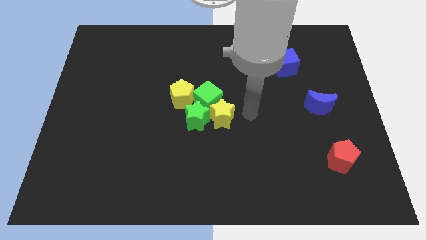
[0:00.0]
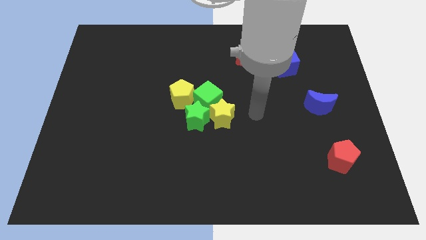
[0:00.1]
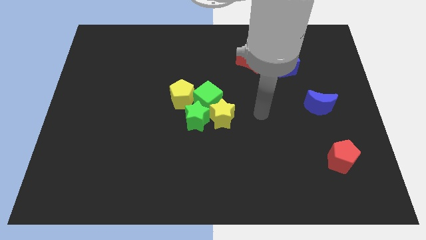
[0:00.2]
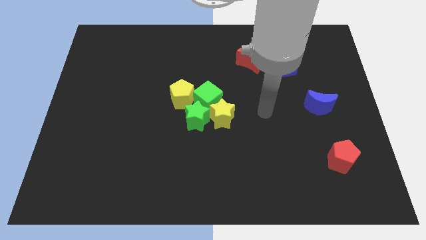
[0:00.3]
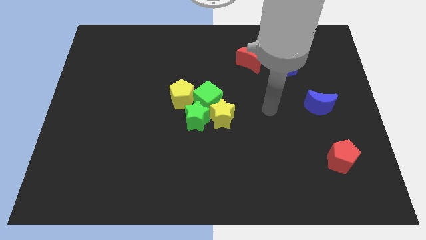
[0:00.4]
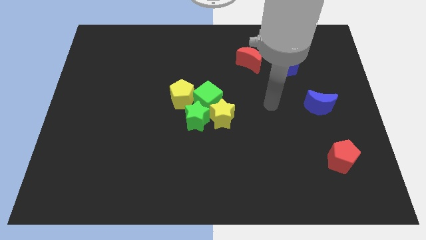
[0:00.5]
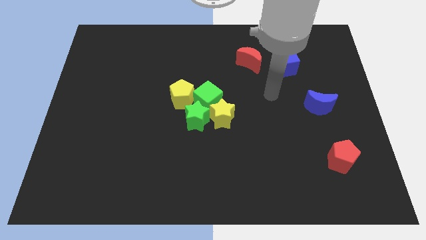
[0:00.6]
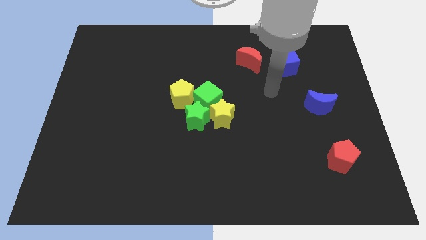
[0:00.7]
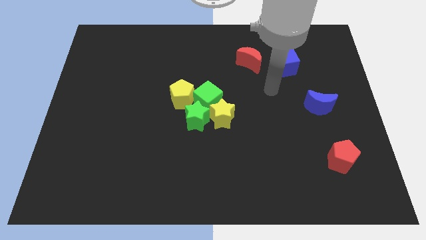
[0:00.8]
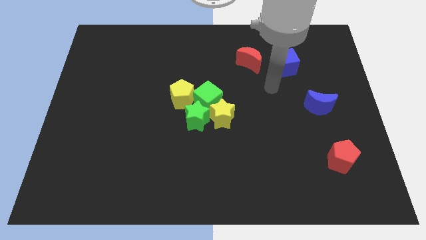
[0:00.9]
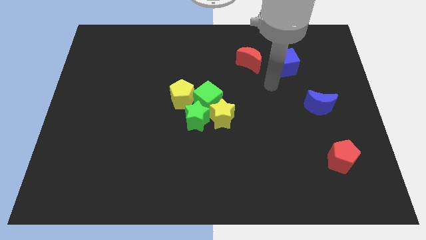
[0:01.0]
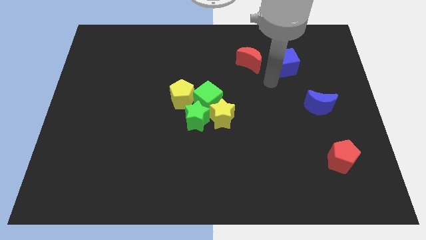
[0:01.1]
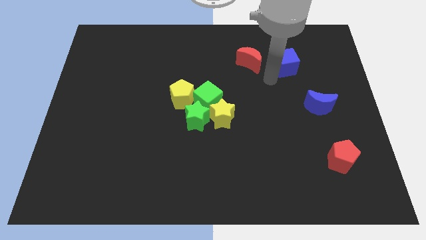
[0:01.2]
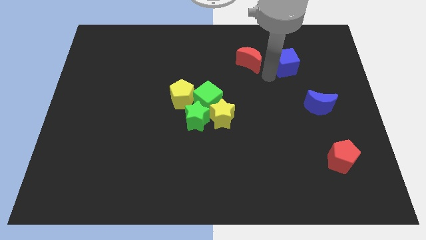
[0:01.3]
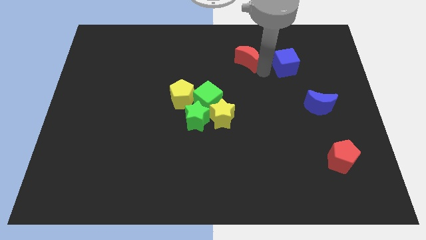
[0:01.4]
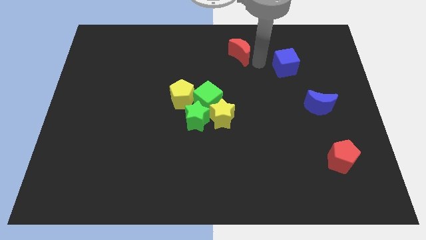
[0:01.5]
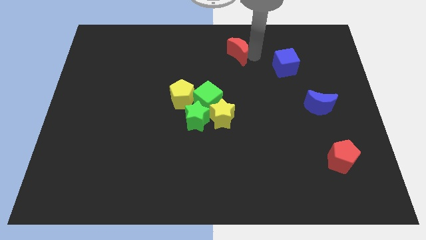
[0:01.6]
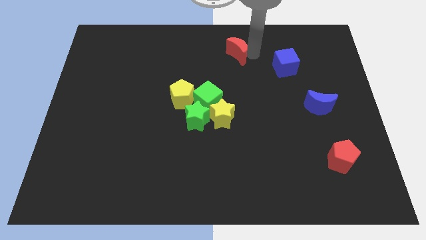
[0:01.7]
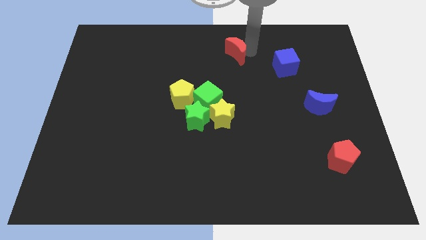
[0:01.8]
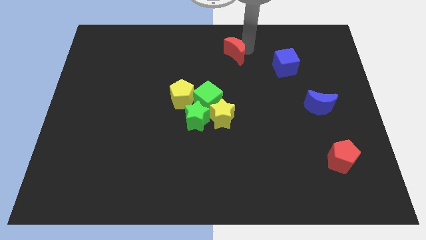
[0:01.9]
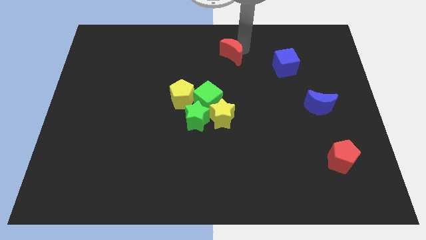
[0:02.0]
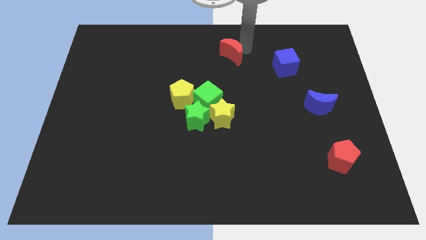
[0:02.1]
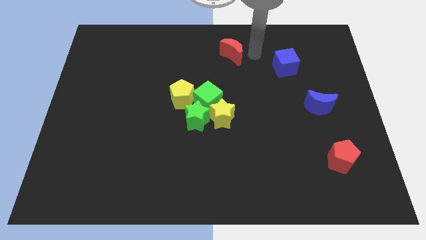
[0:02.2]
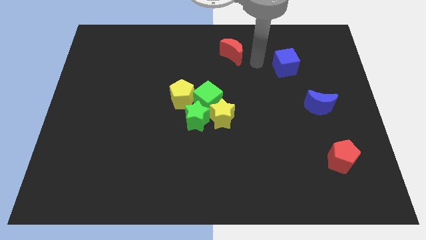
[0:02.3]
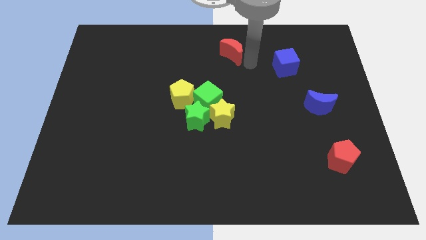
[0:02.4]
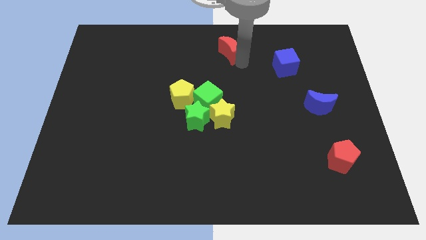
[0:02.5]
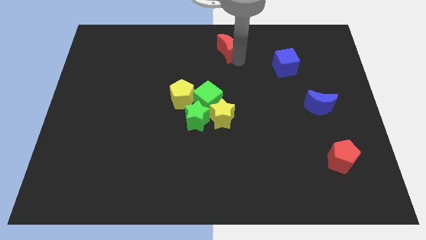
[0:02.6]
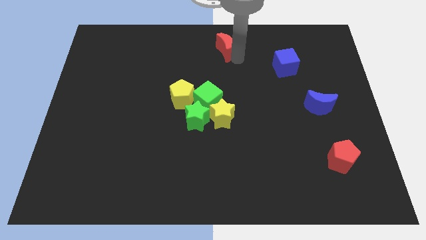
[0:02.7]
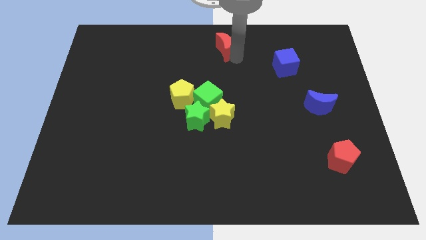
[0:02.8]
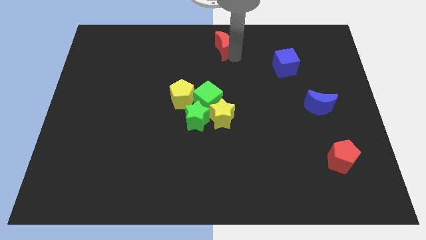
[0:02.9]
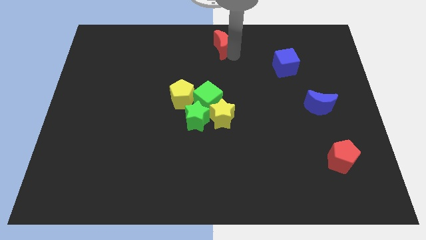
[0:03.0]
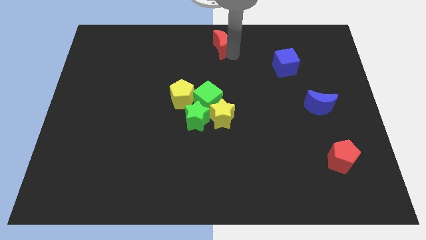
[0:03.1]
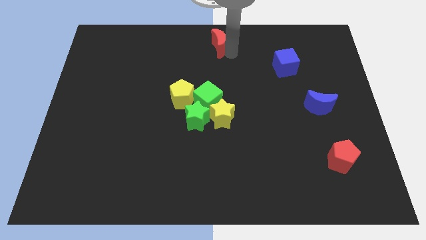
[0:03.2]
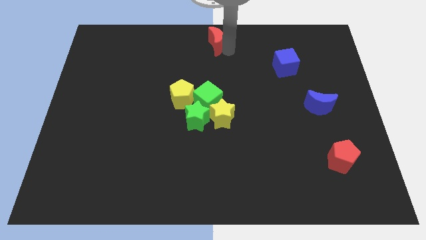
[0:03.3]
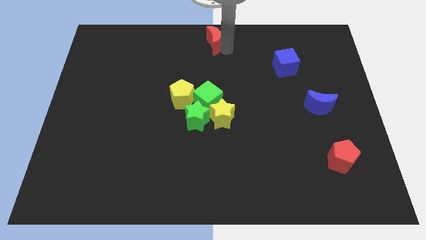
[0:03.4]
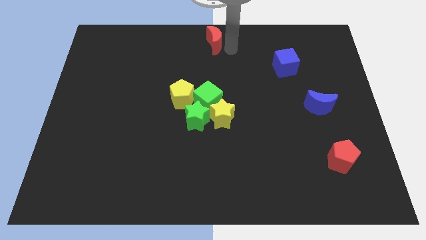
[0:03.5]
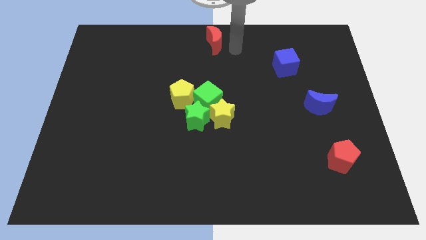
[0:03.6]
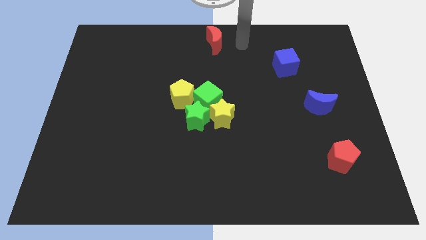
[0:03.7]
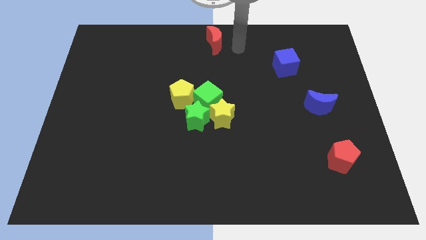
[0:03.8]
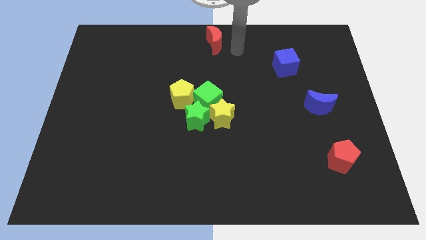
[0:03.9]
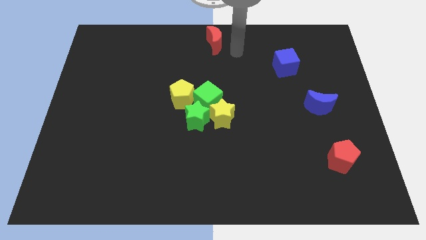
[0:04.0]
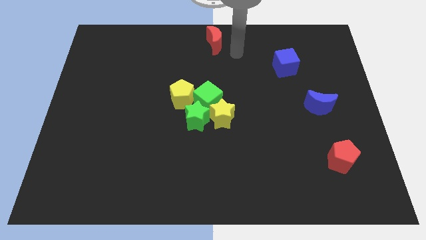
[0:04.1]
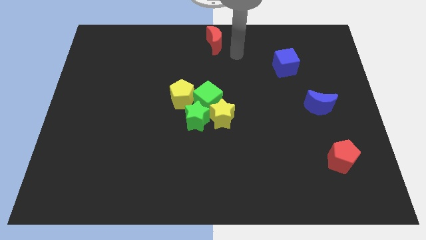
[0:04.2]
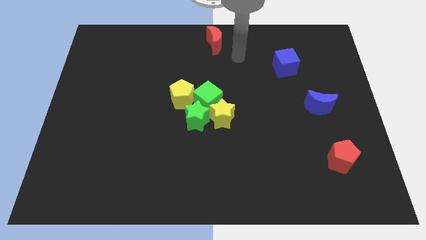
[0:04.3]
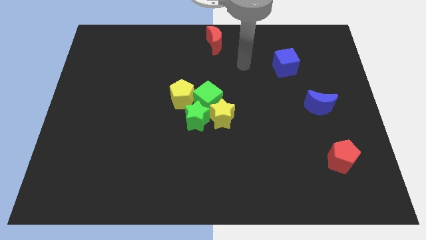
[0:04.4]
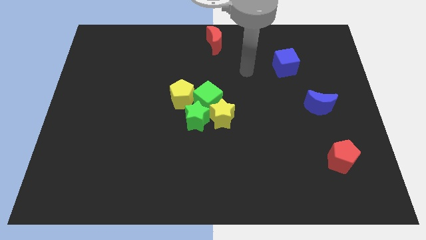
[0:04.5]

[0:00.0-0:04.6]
move the red pentagon to the top center of the board

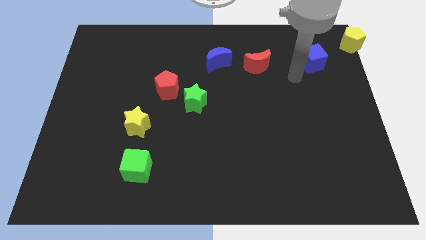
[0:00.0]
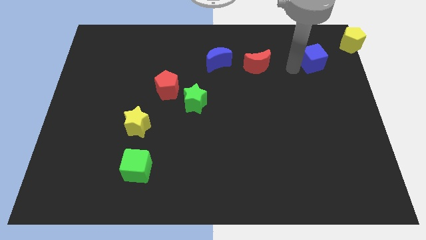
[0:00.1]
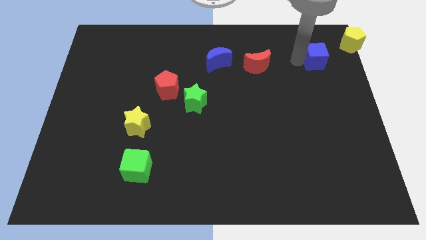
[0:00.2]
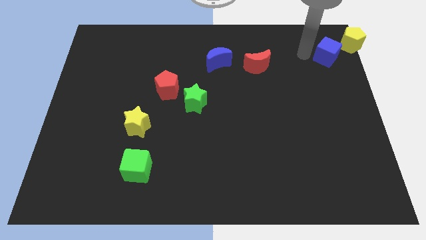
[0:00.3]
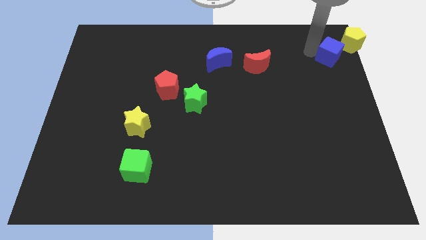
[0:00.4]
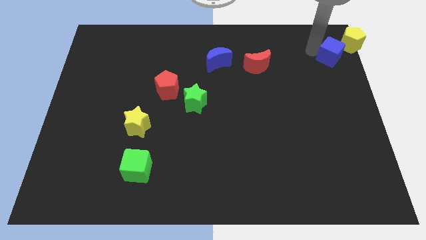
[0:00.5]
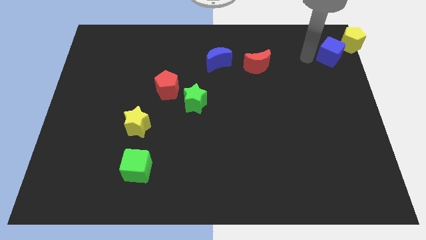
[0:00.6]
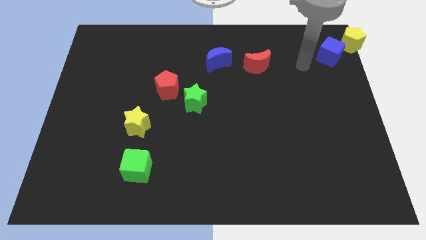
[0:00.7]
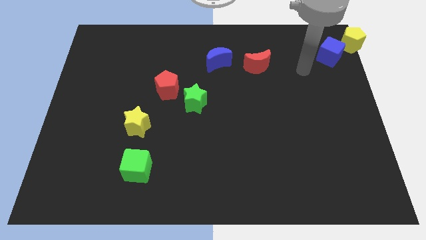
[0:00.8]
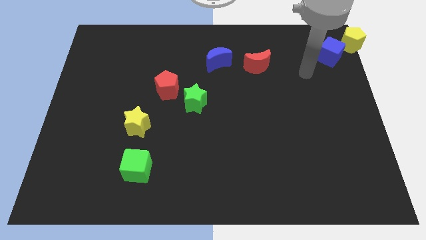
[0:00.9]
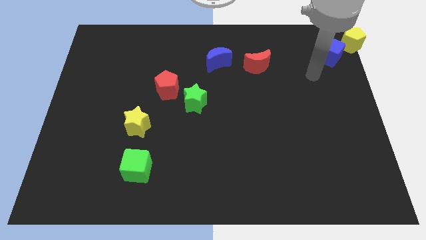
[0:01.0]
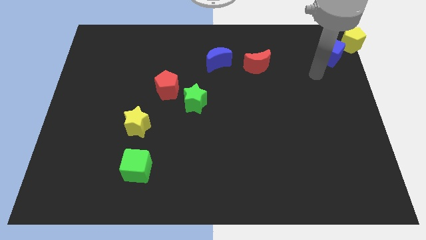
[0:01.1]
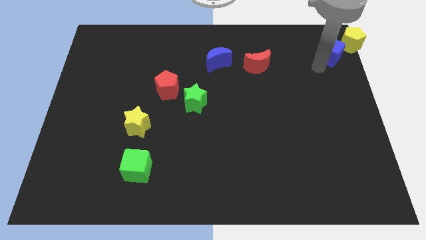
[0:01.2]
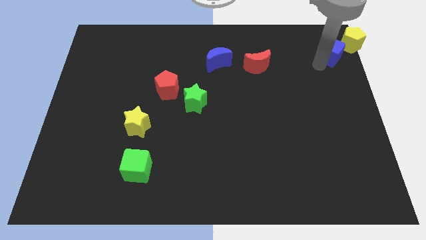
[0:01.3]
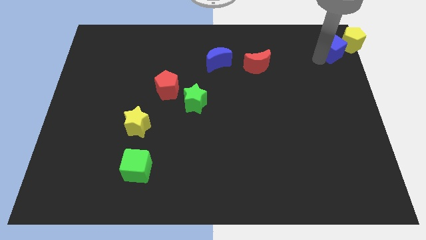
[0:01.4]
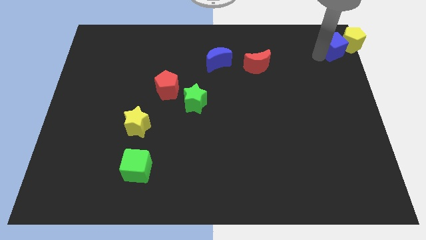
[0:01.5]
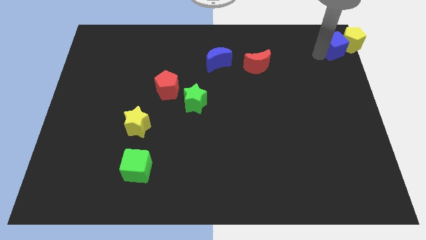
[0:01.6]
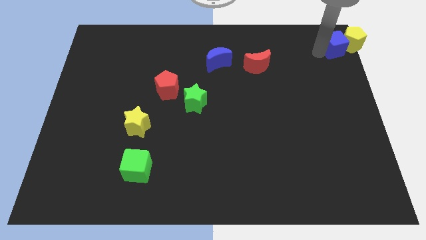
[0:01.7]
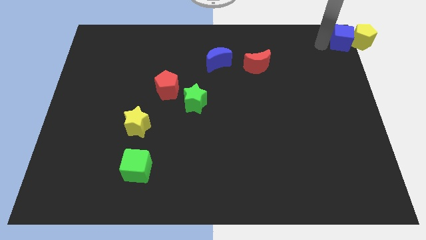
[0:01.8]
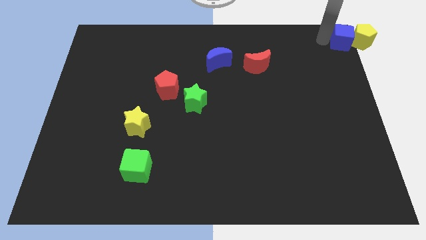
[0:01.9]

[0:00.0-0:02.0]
push the blue cube into the yellow pentagon

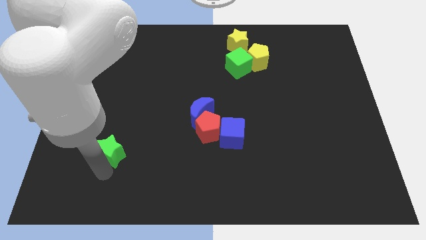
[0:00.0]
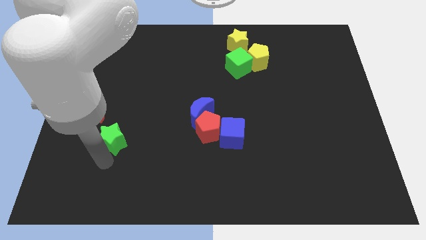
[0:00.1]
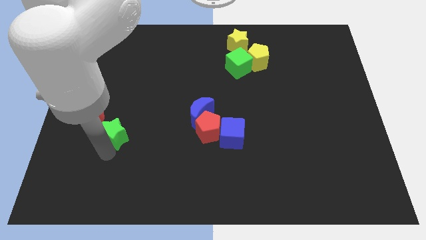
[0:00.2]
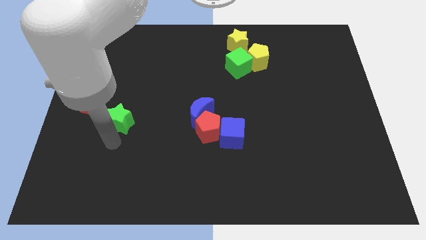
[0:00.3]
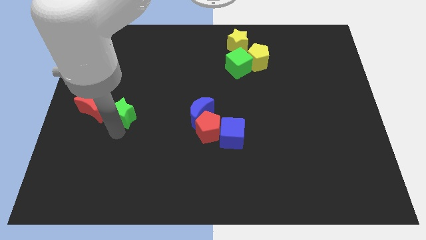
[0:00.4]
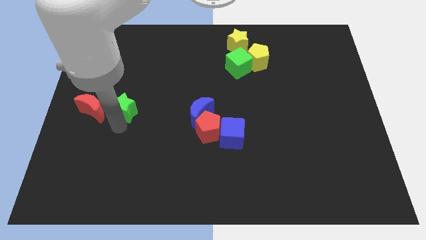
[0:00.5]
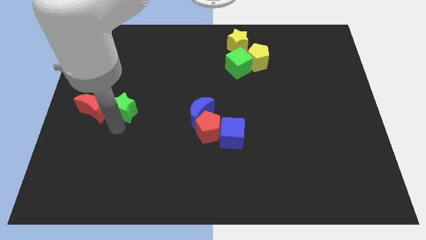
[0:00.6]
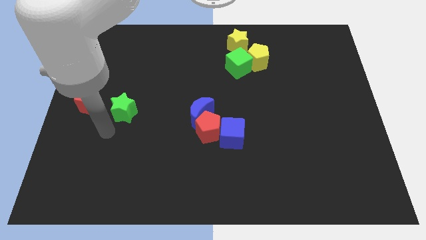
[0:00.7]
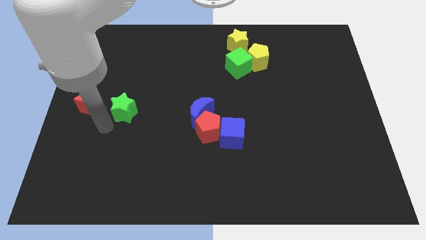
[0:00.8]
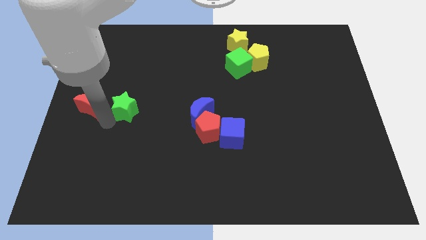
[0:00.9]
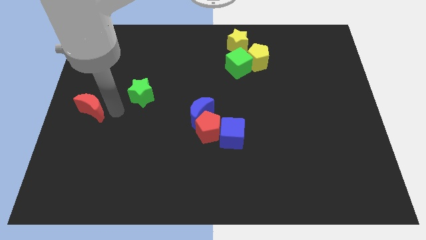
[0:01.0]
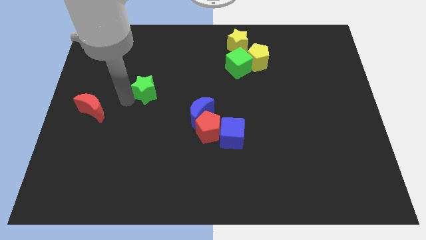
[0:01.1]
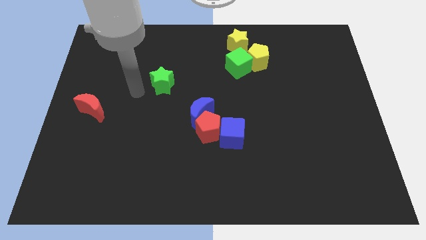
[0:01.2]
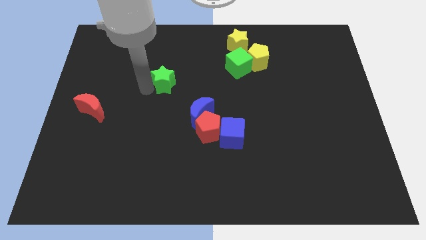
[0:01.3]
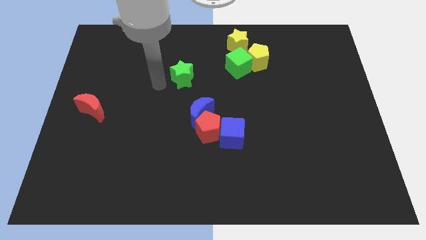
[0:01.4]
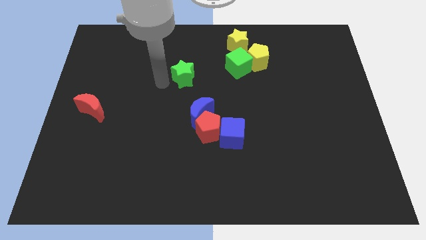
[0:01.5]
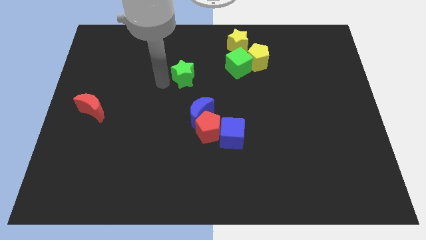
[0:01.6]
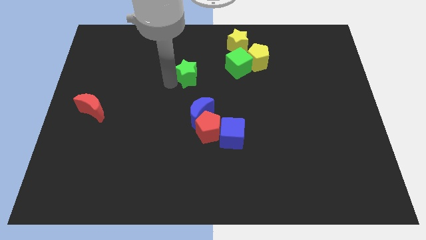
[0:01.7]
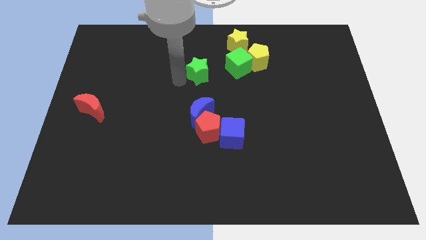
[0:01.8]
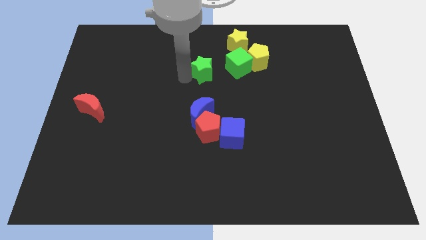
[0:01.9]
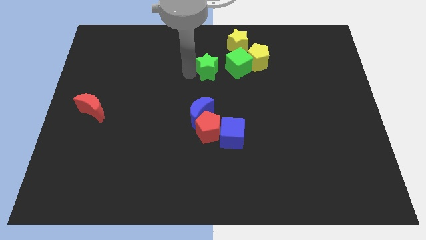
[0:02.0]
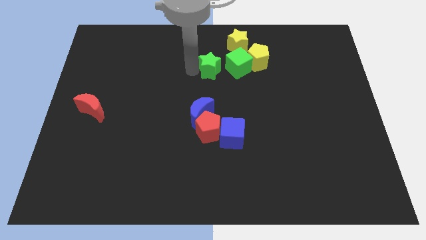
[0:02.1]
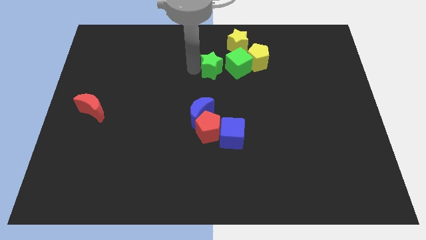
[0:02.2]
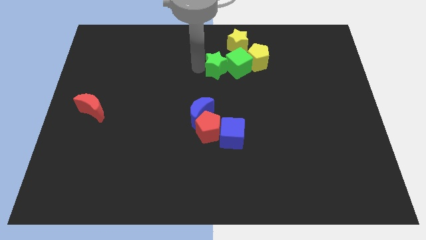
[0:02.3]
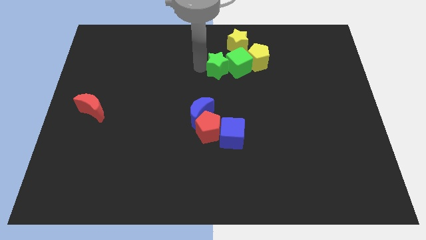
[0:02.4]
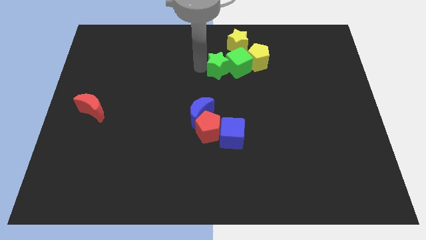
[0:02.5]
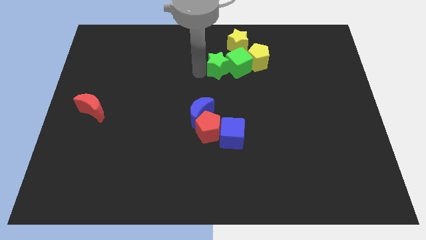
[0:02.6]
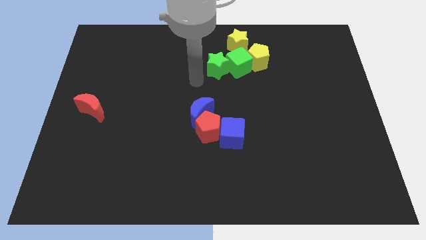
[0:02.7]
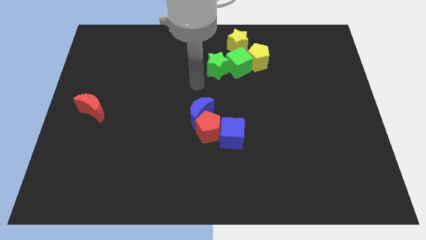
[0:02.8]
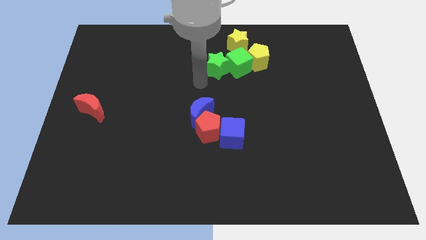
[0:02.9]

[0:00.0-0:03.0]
put the green star into the green cube
